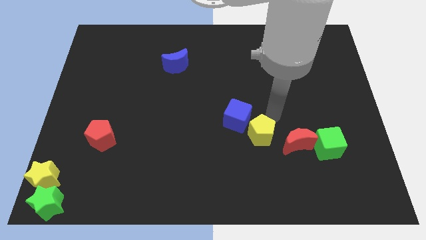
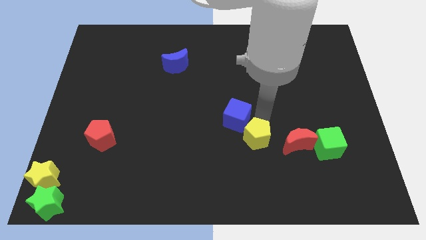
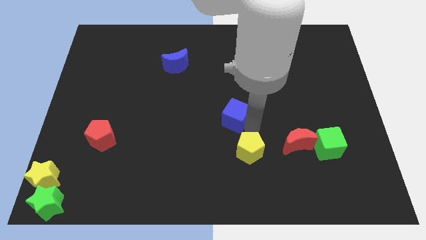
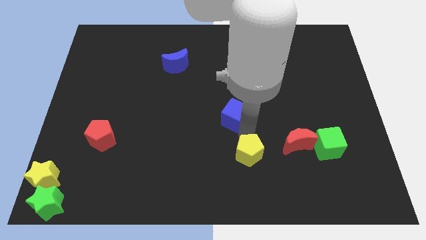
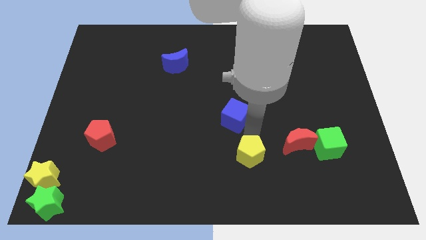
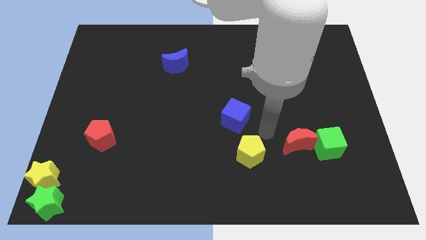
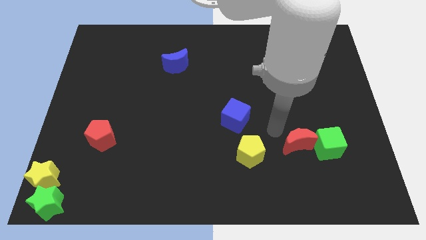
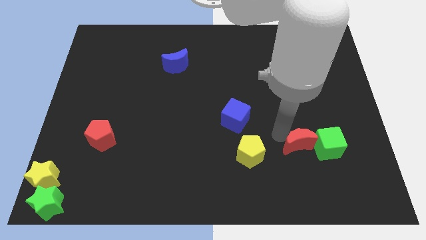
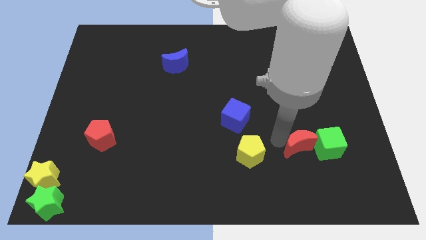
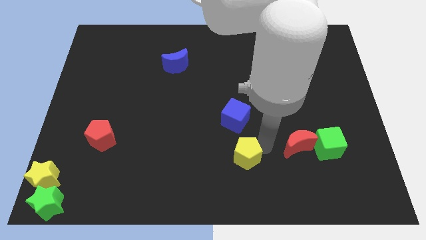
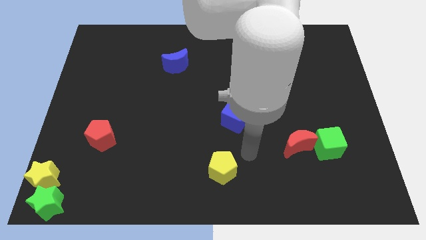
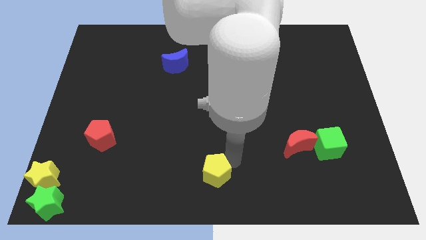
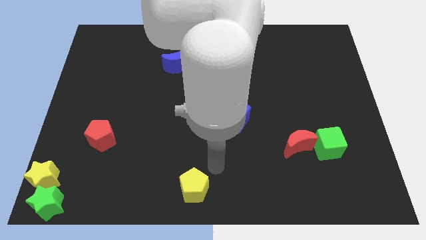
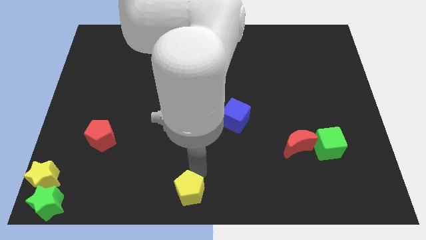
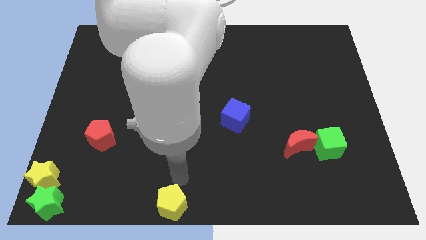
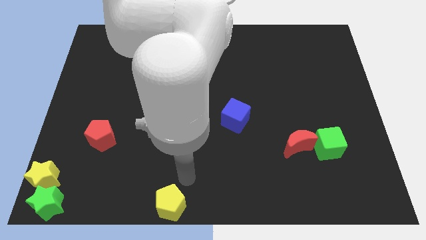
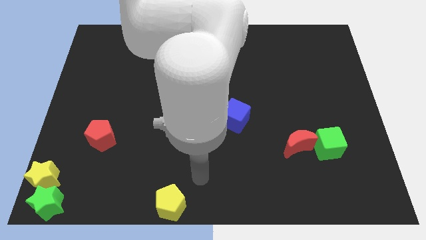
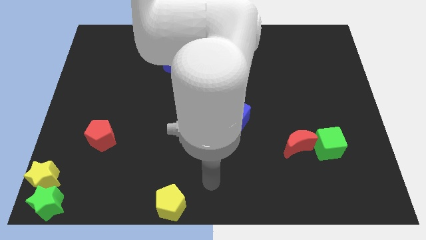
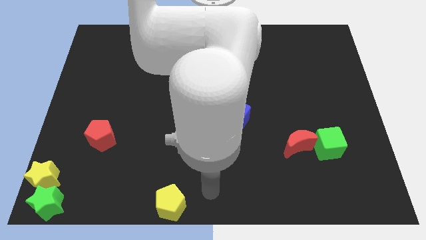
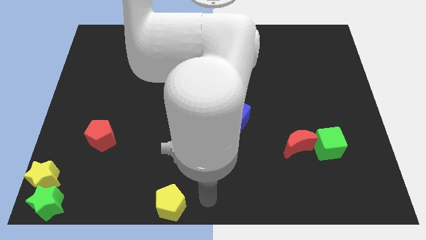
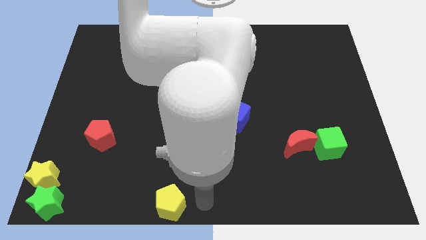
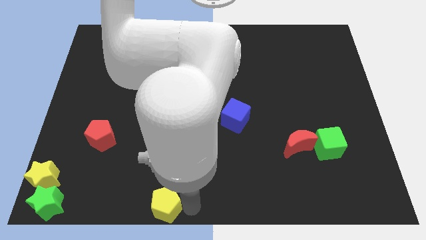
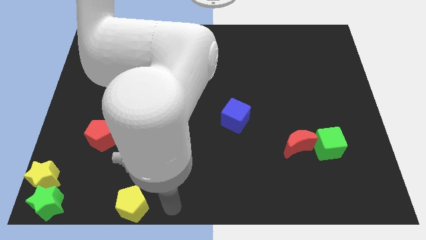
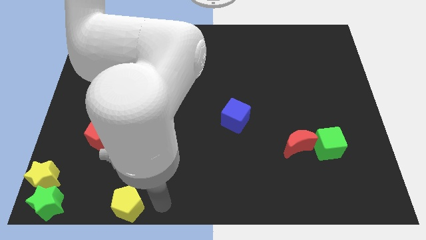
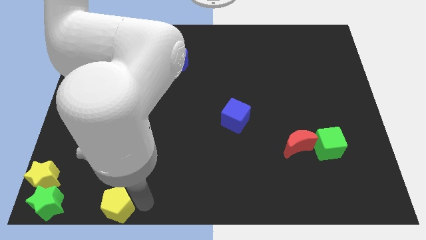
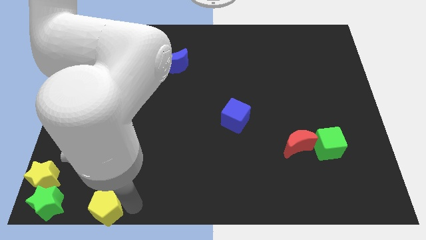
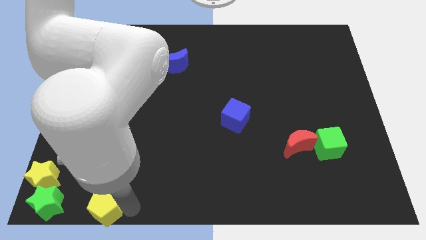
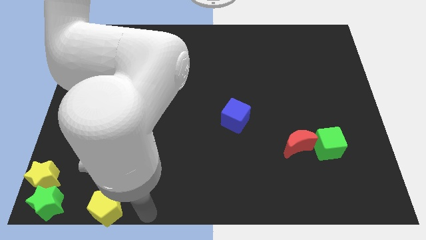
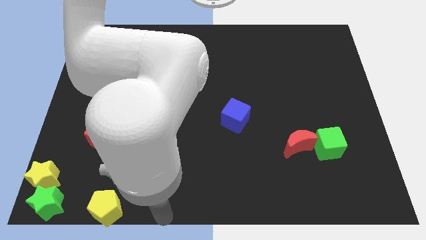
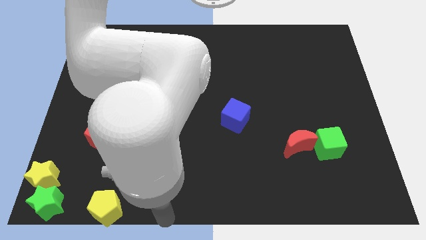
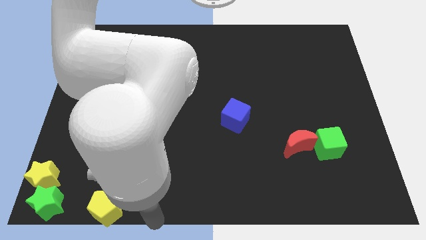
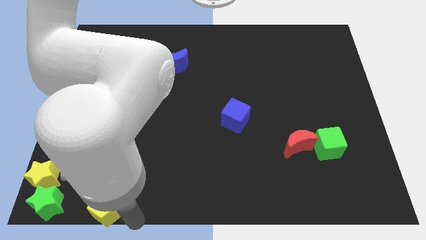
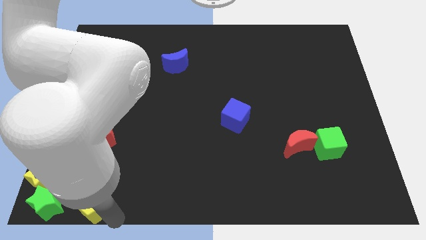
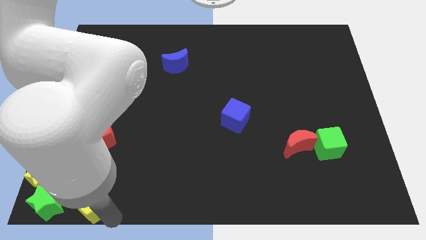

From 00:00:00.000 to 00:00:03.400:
place yellow pentagon to the bottom of the red pentagon

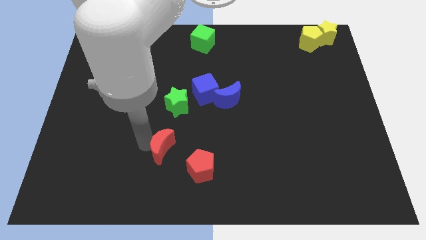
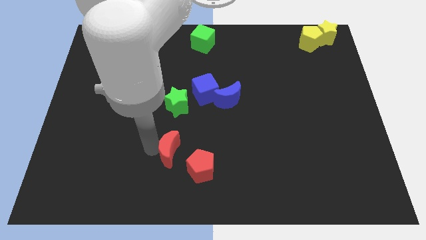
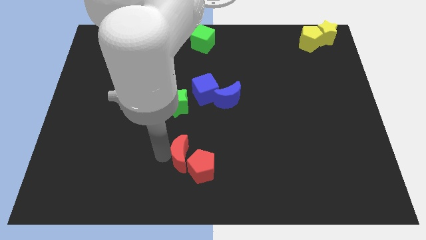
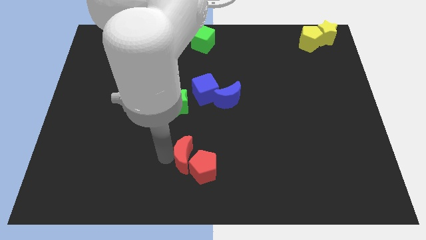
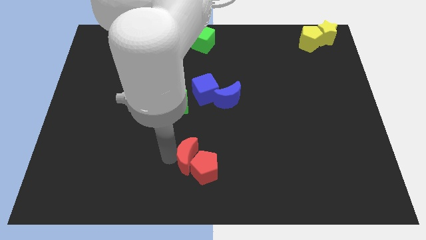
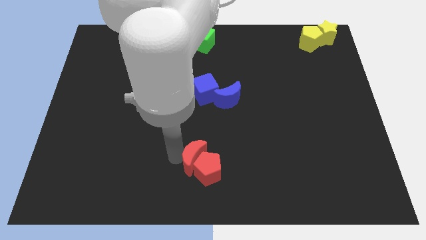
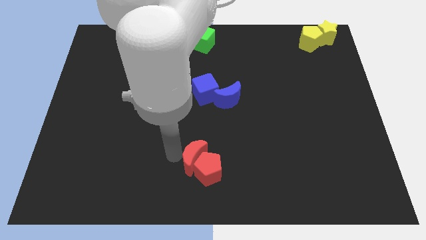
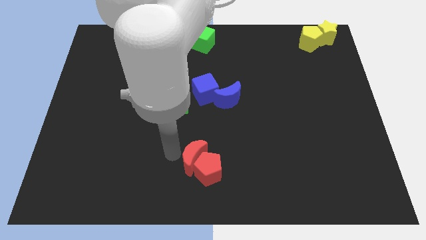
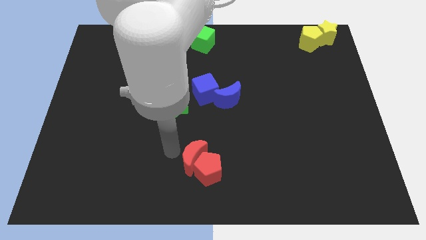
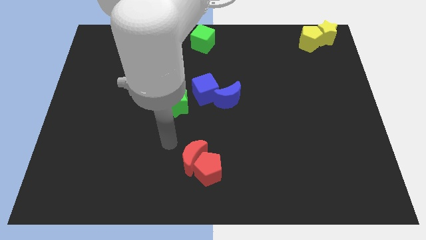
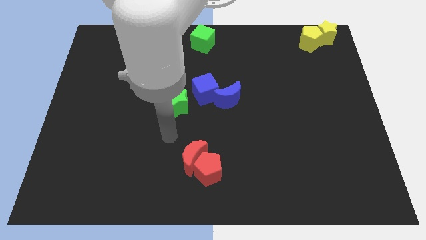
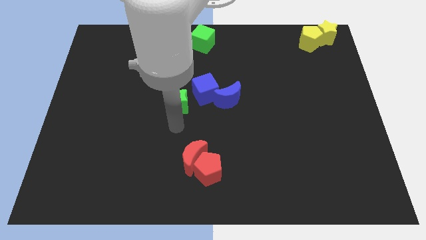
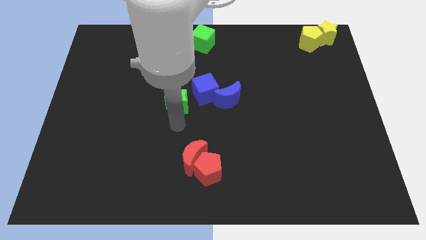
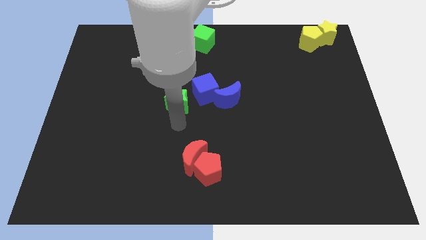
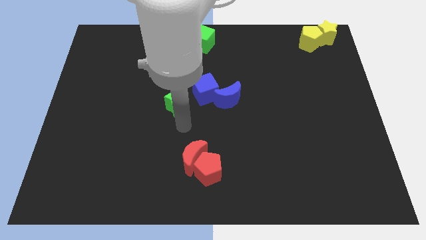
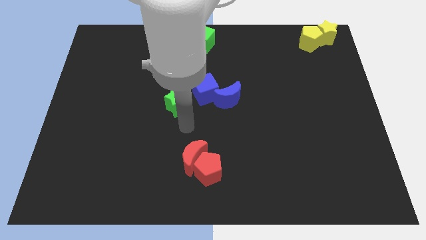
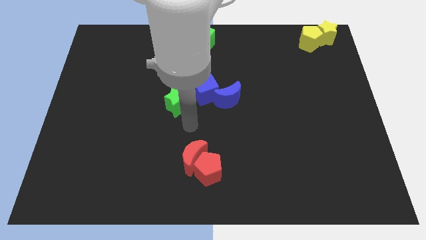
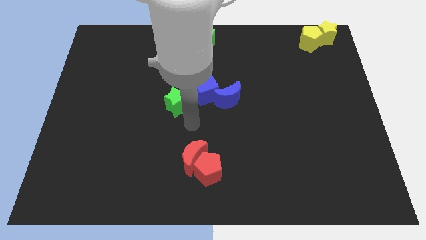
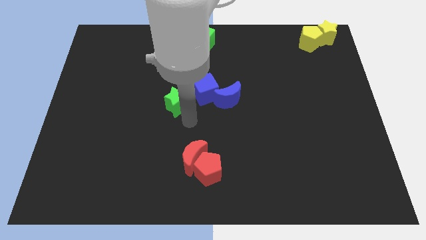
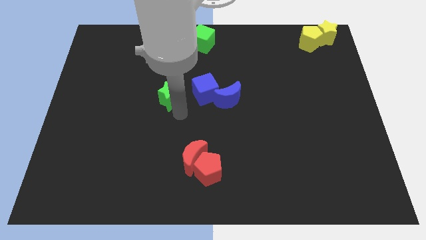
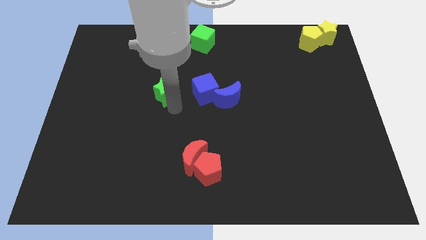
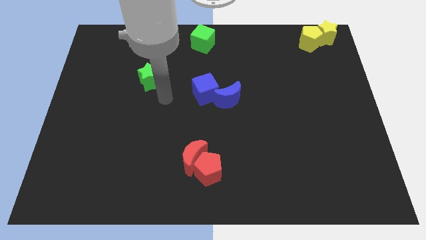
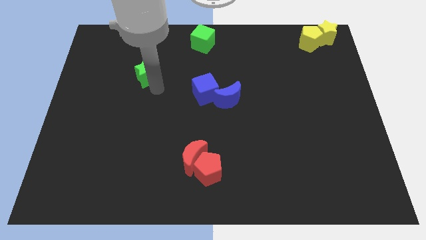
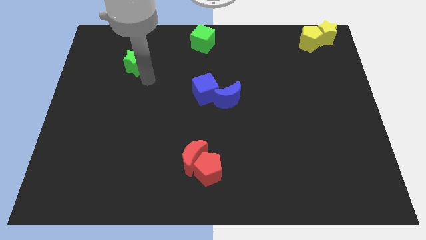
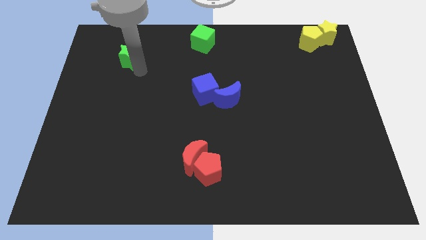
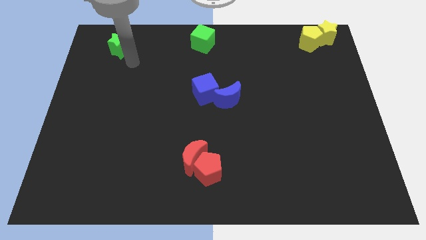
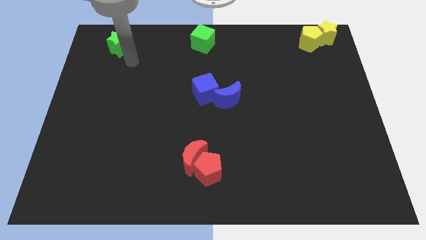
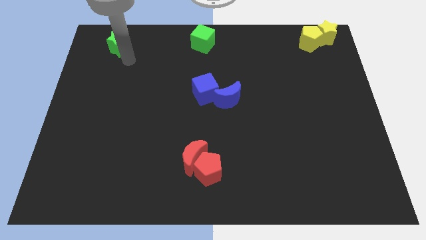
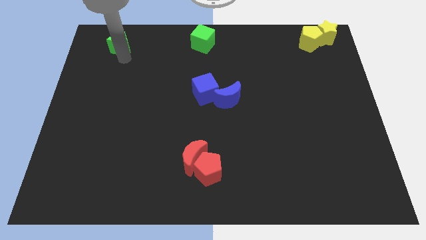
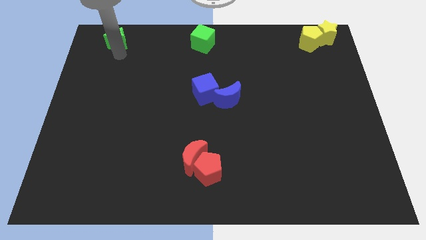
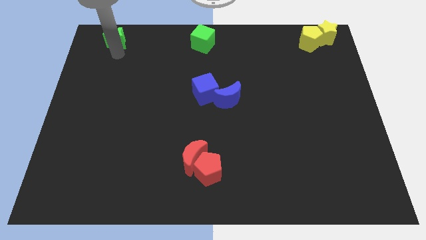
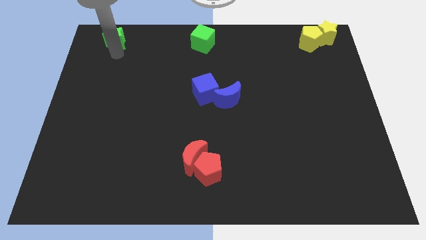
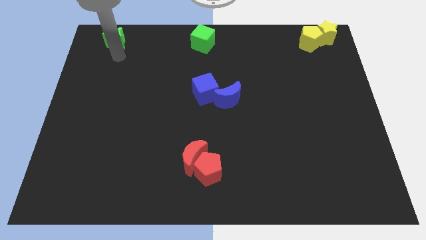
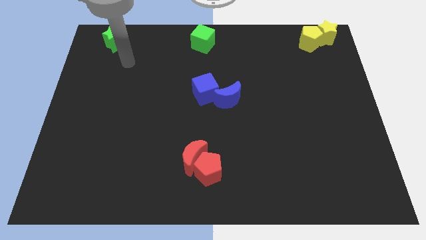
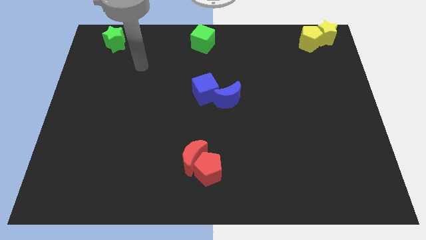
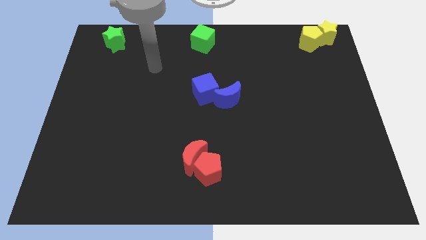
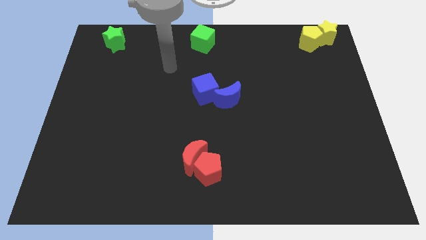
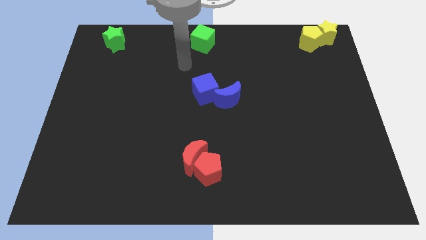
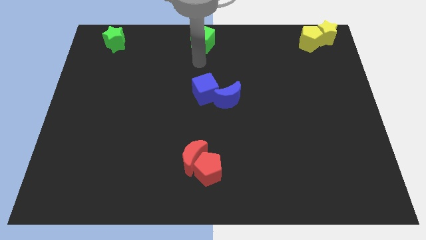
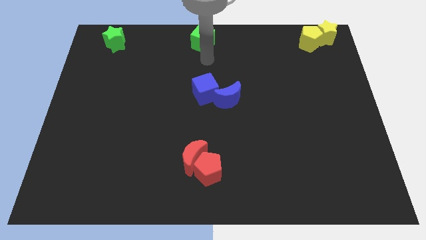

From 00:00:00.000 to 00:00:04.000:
place green star to the top left corner of the board

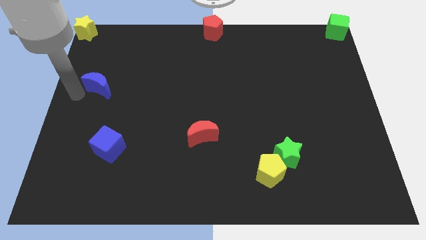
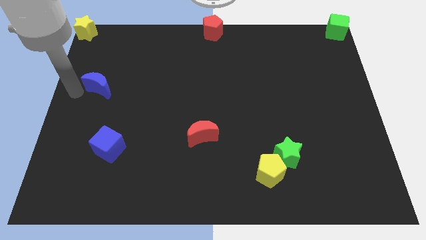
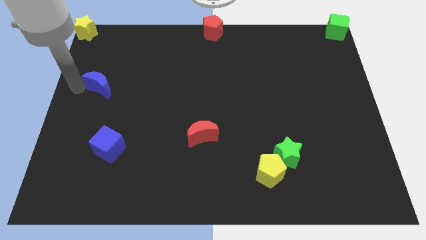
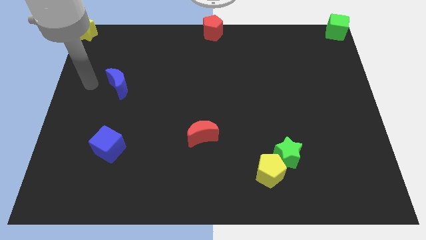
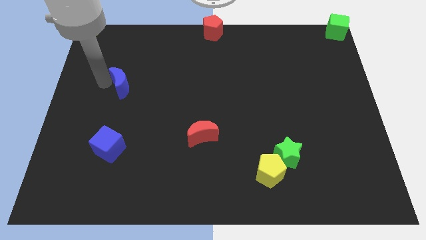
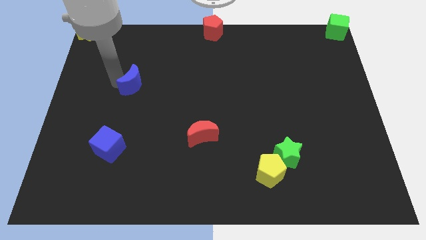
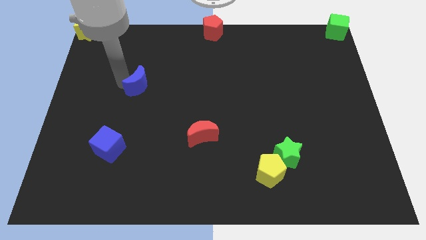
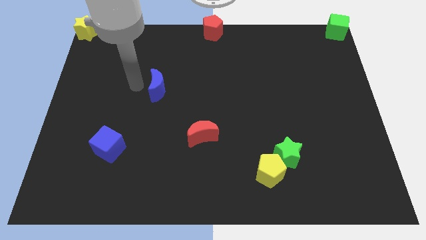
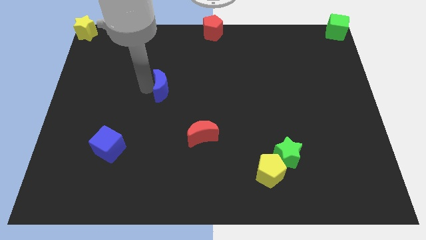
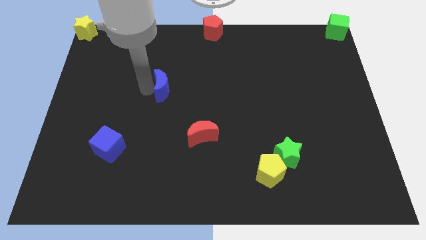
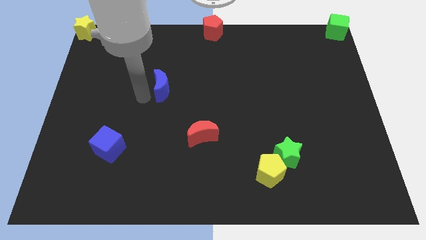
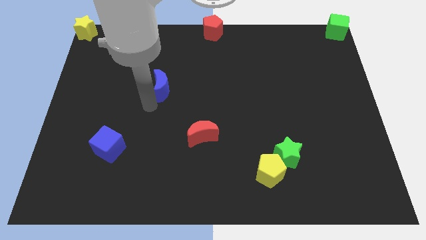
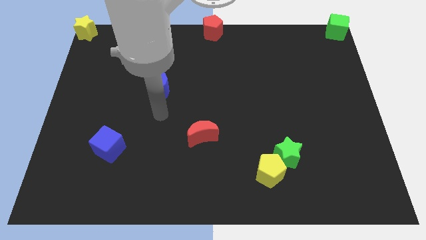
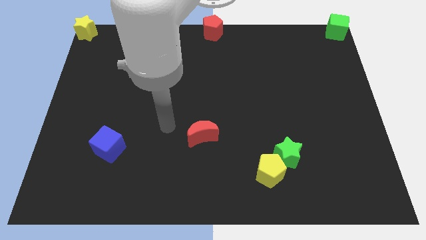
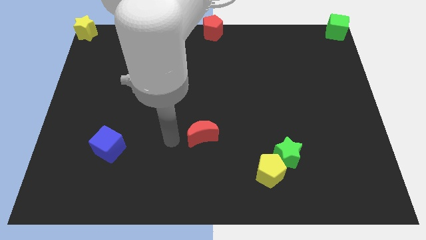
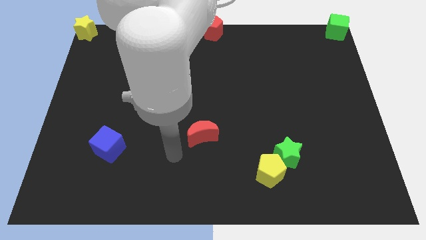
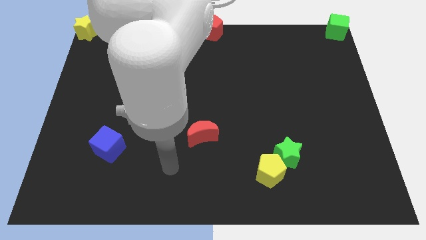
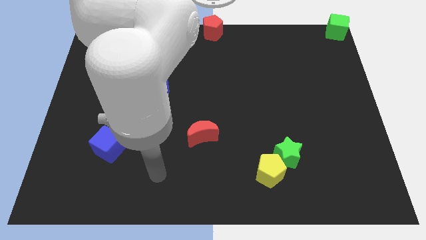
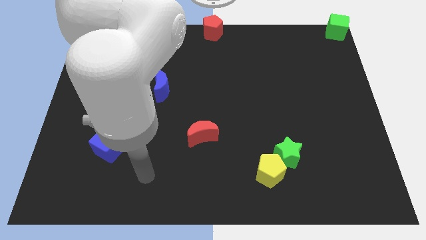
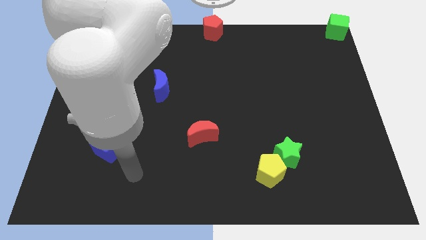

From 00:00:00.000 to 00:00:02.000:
push the blue crescent towards the center of the board
